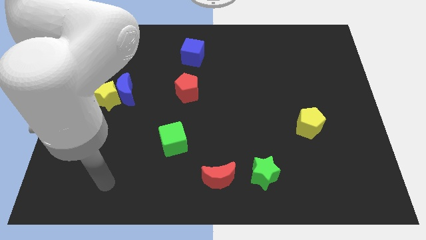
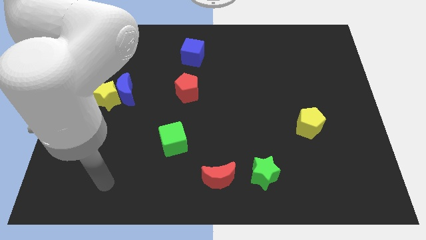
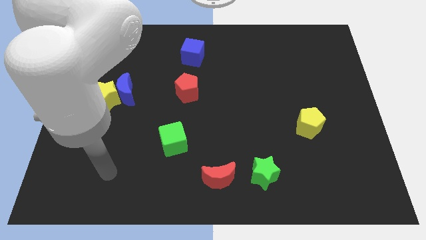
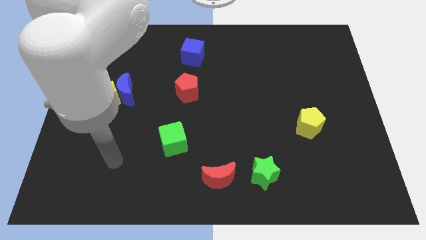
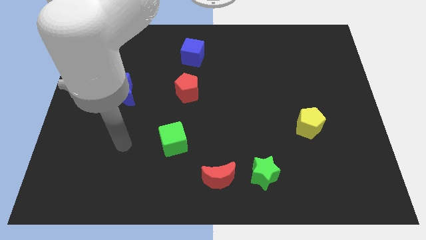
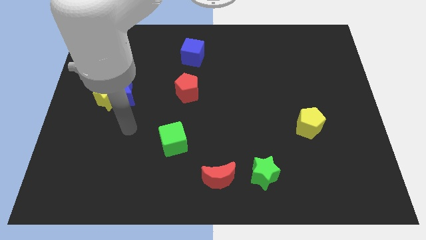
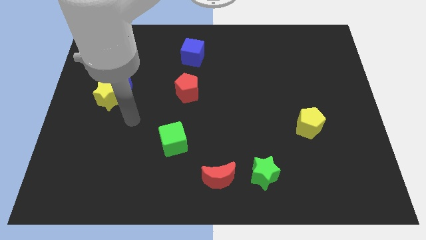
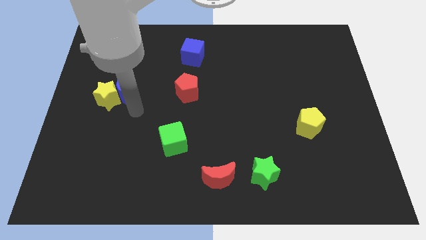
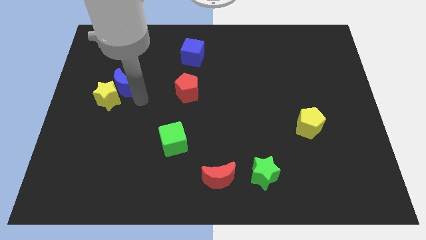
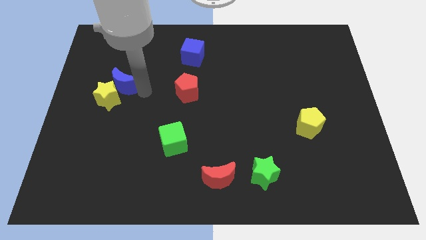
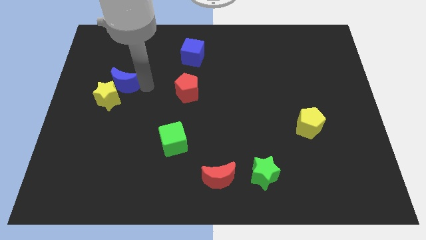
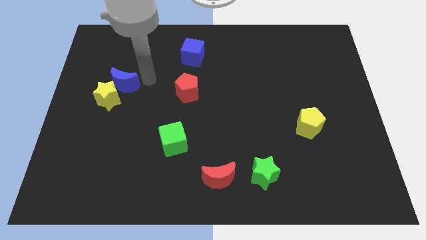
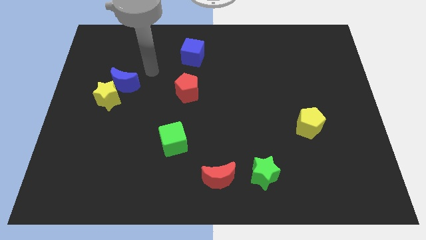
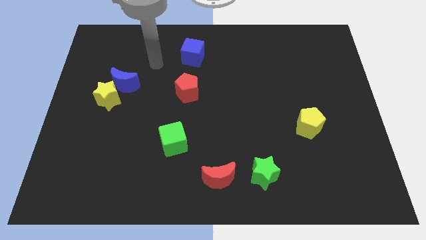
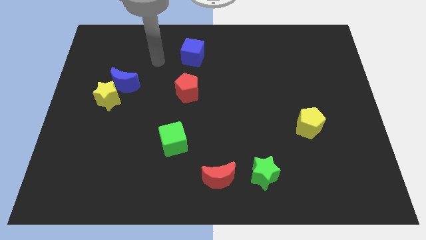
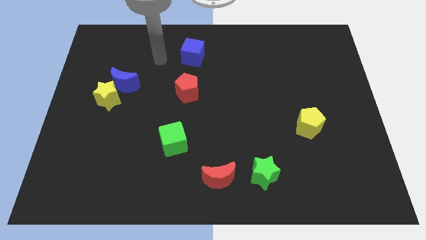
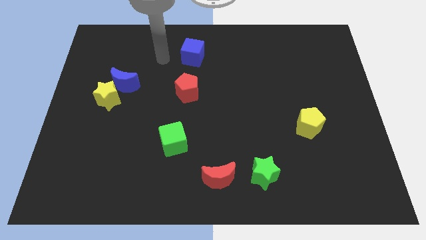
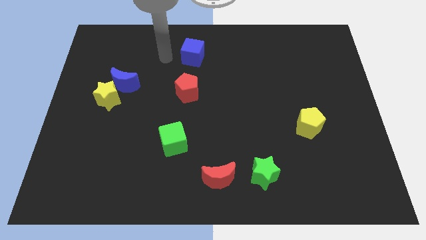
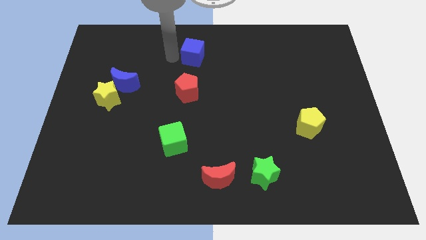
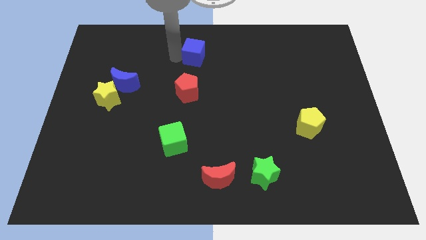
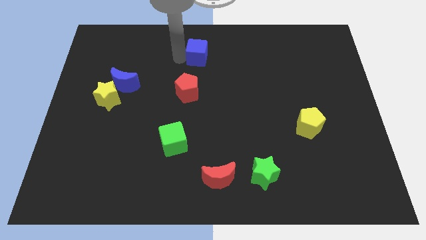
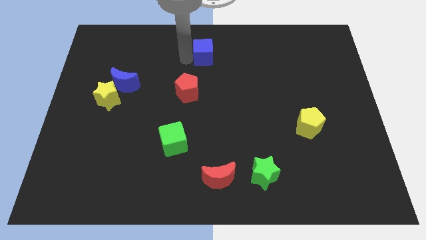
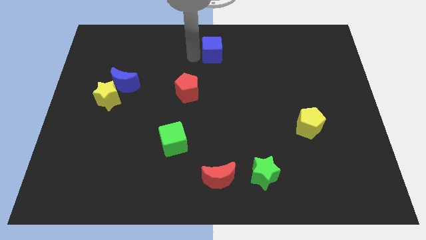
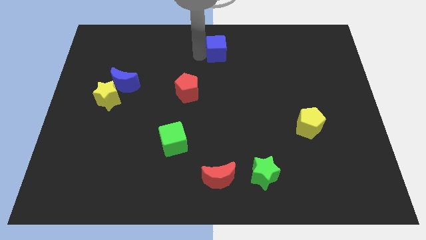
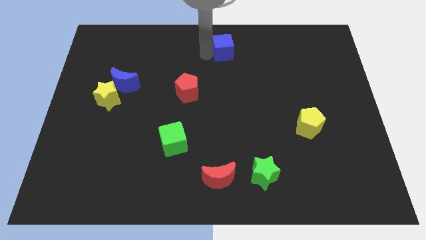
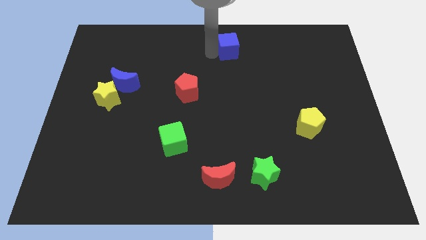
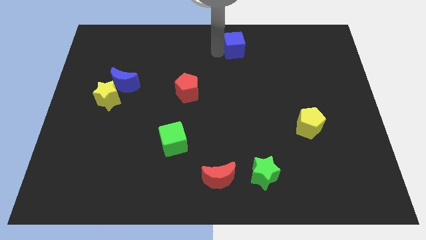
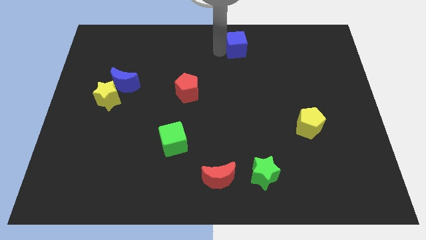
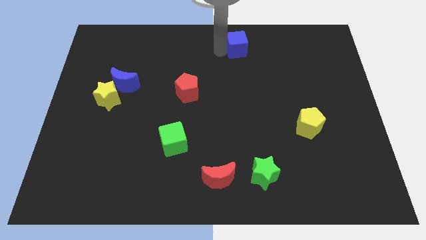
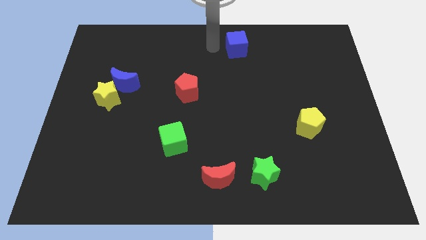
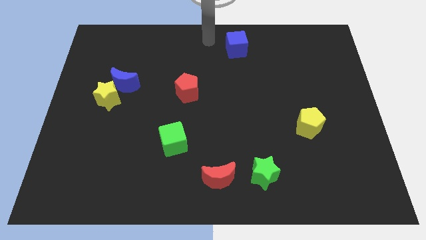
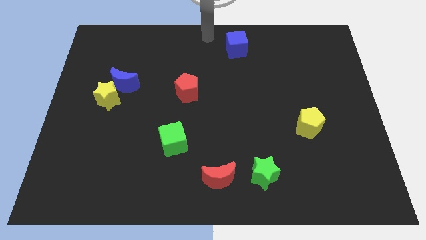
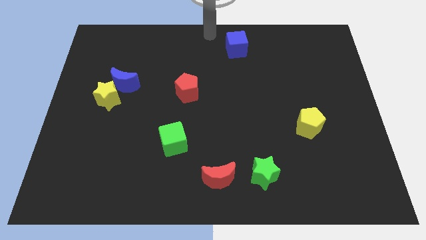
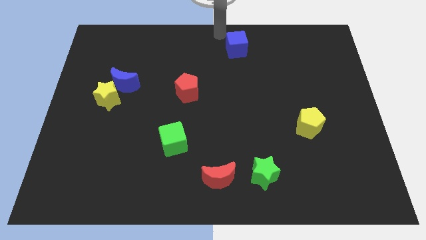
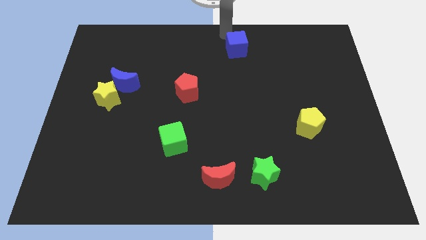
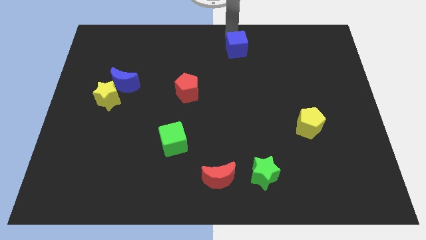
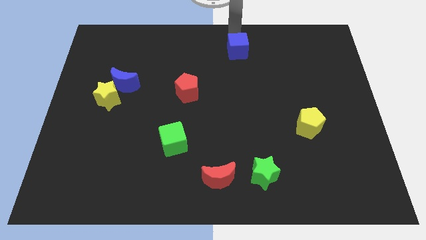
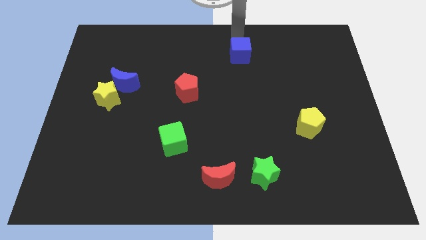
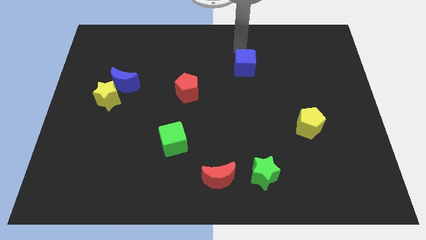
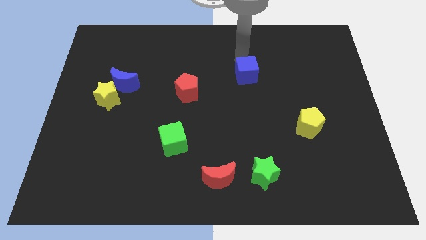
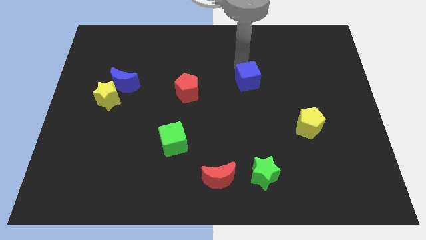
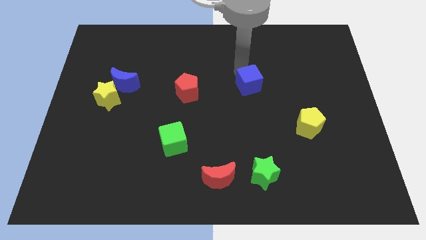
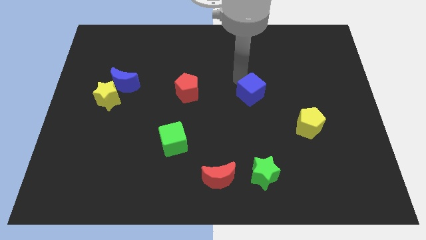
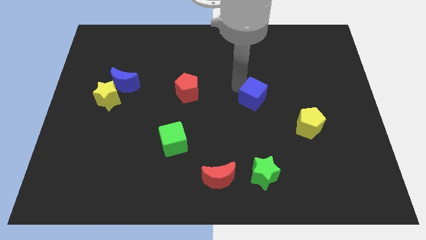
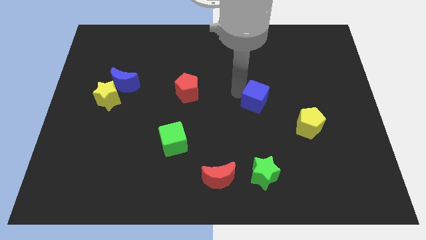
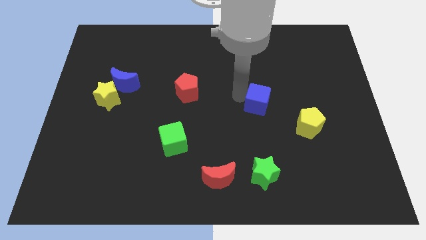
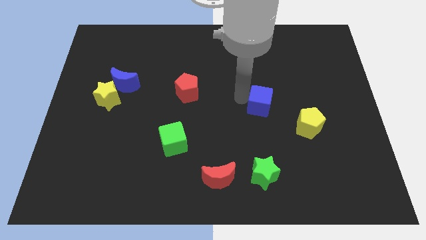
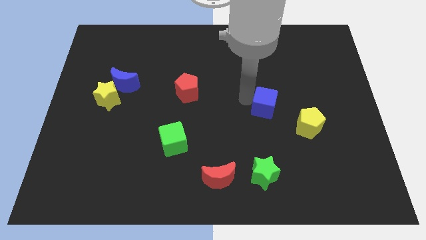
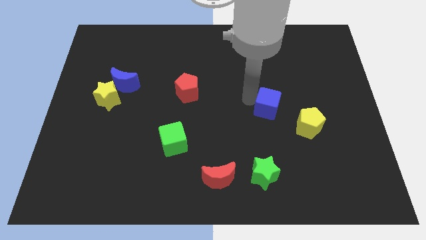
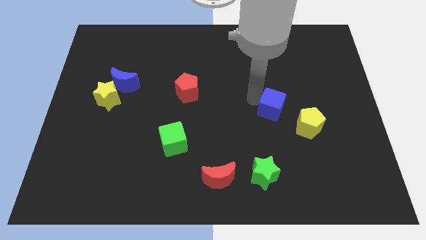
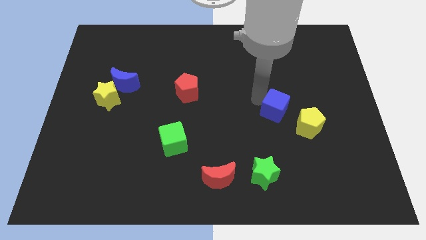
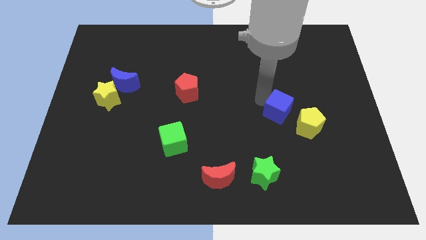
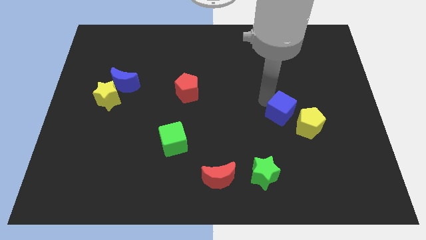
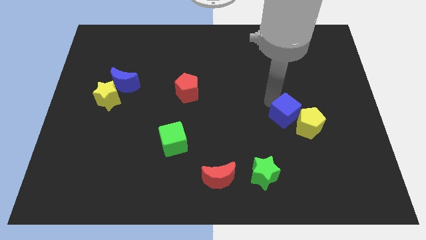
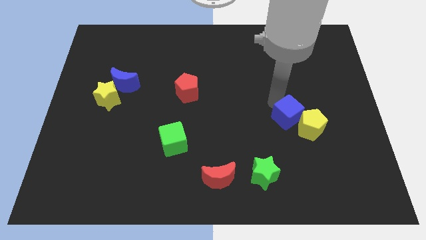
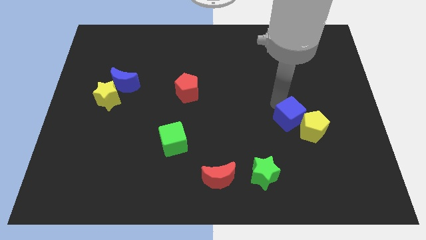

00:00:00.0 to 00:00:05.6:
slide the blue cube close to the yellow pentagon

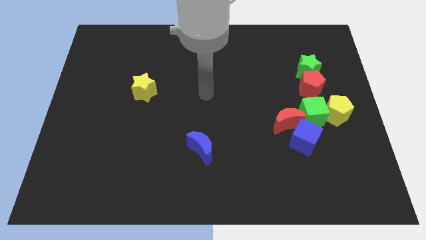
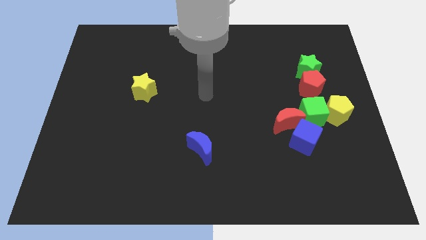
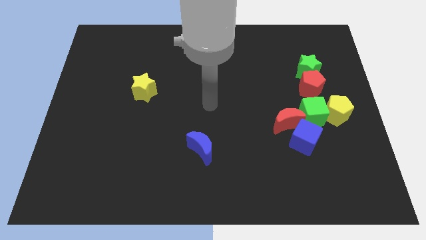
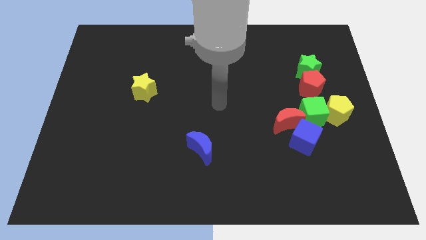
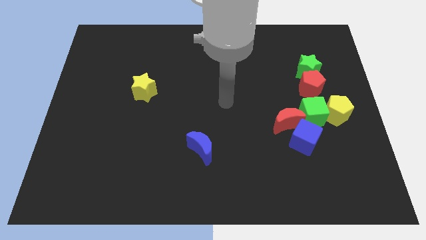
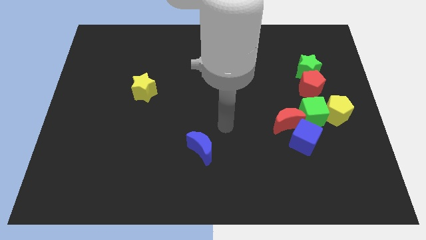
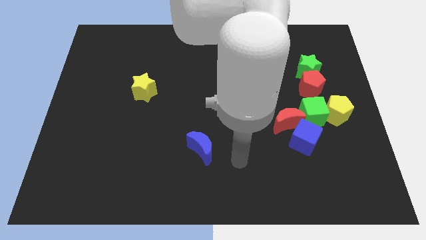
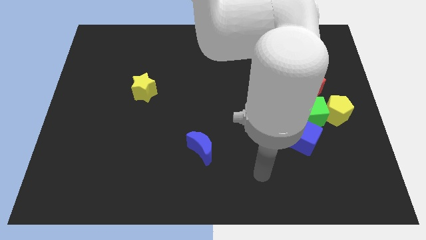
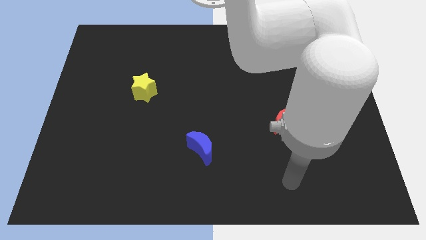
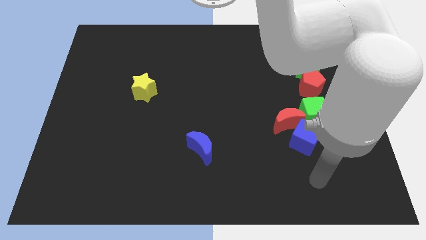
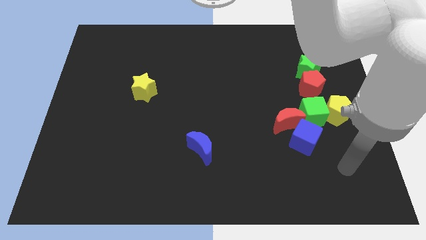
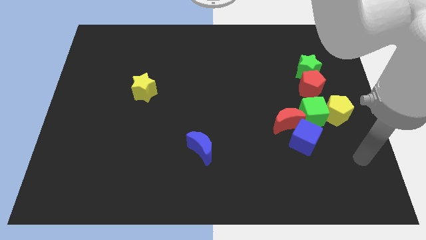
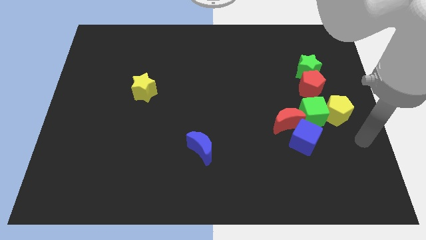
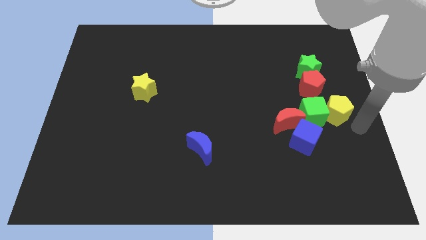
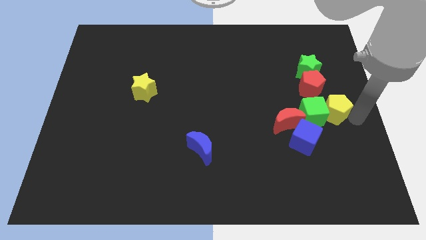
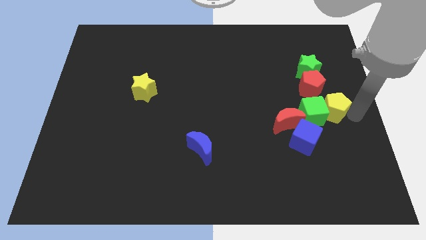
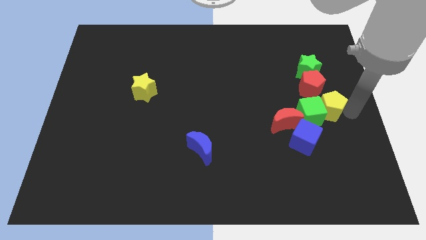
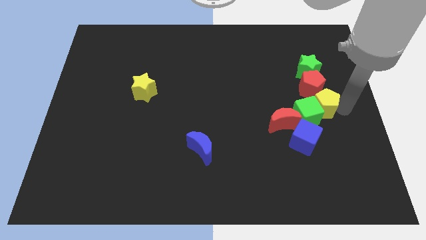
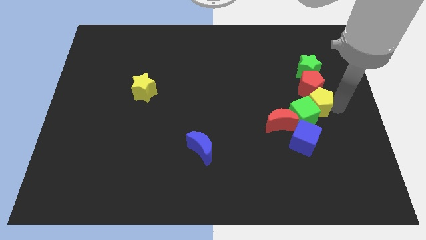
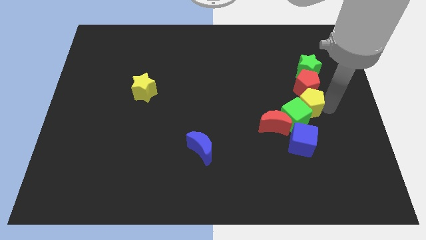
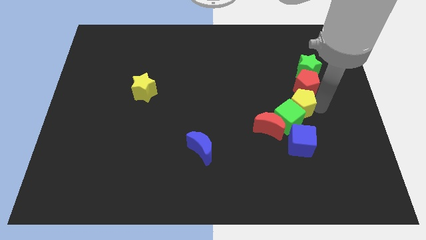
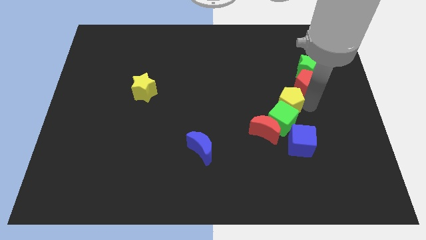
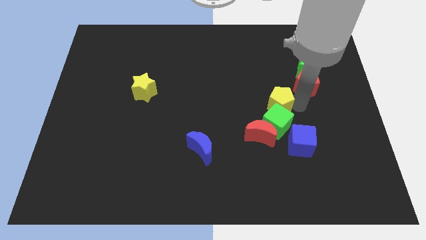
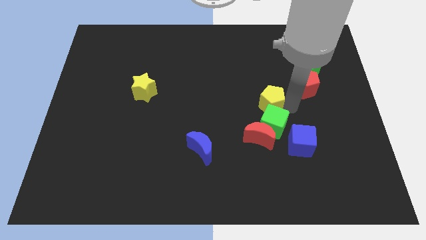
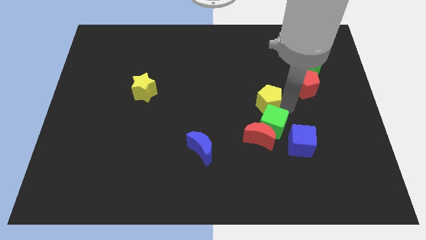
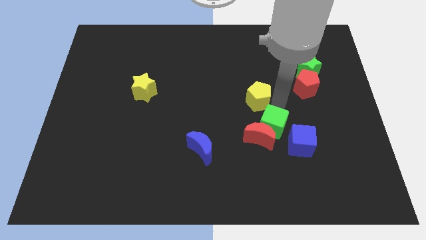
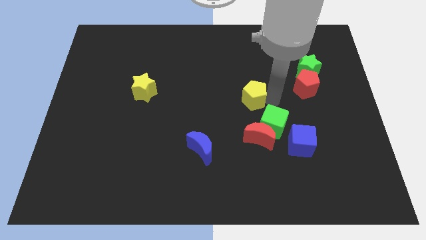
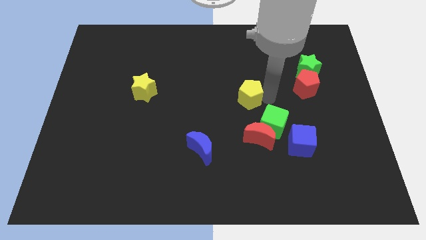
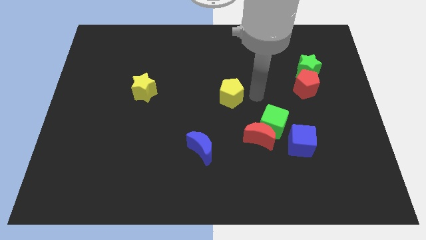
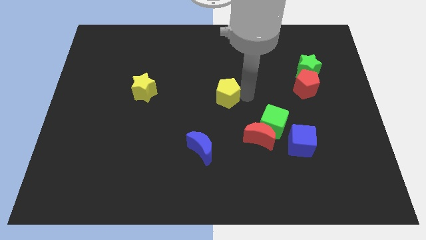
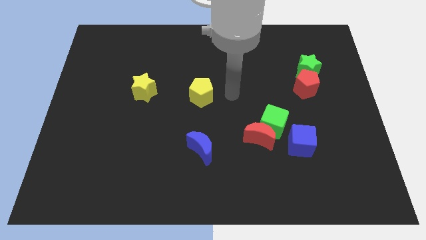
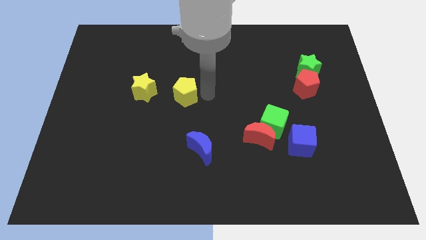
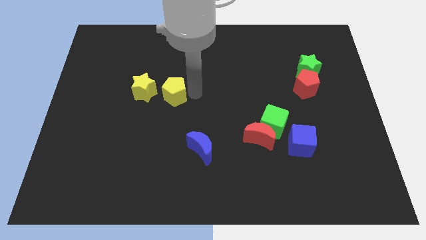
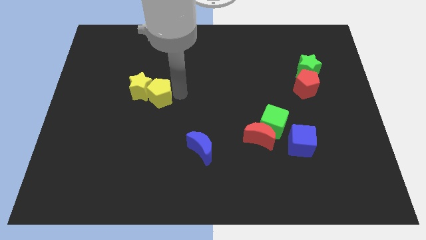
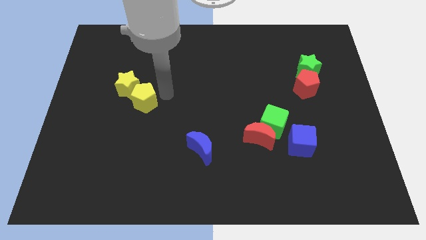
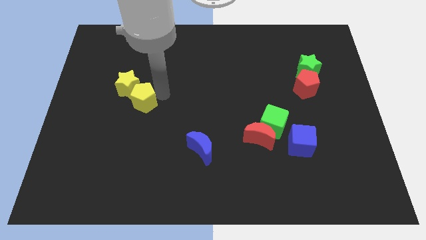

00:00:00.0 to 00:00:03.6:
push the yellow pentagon to the yellow star
